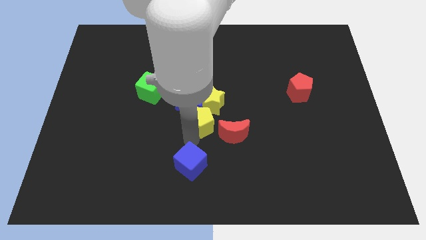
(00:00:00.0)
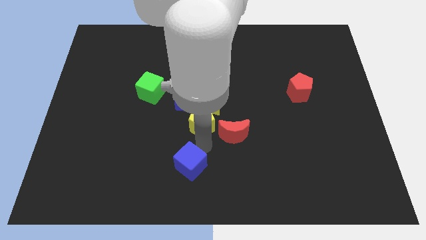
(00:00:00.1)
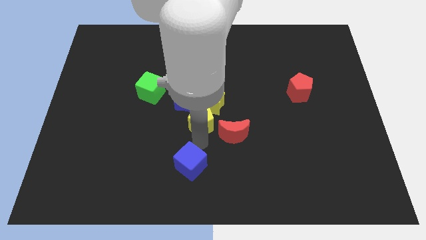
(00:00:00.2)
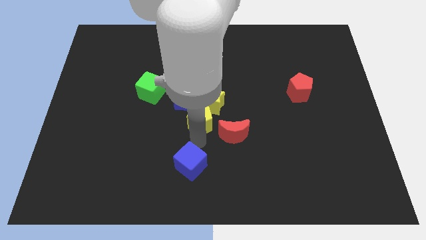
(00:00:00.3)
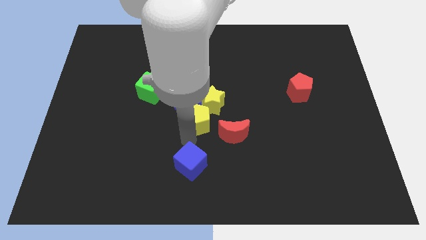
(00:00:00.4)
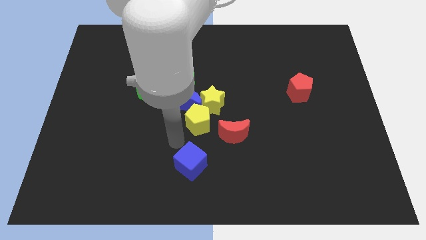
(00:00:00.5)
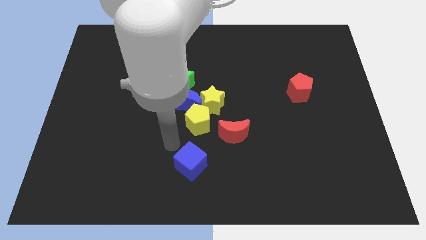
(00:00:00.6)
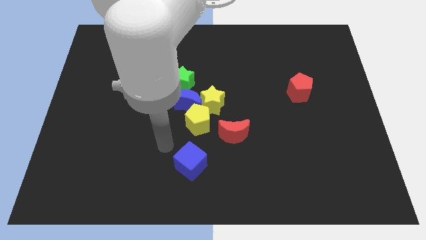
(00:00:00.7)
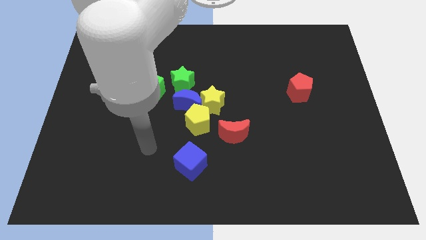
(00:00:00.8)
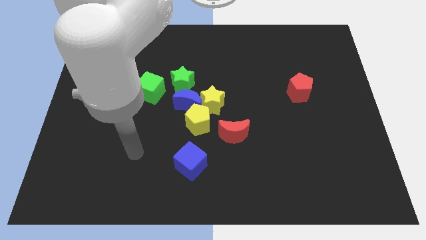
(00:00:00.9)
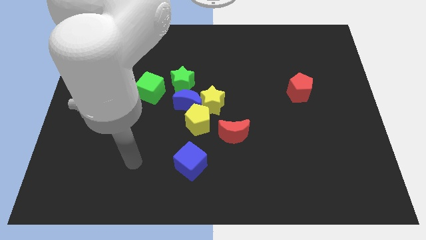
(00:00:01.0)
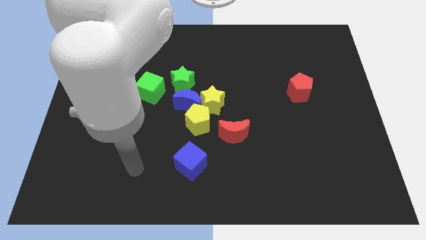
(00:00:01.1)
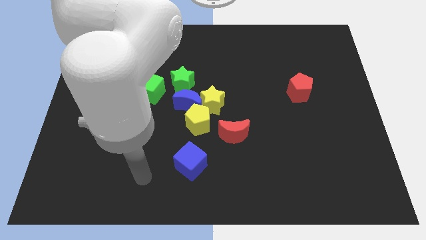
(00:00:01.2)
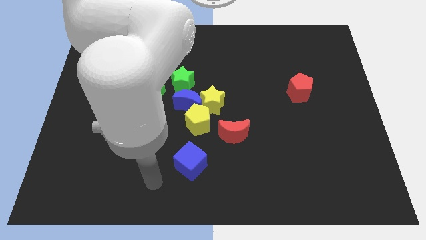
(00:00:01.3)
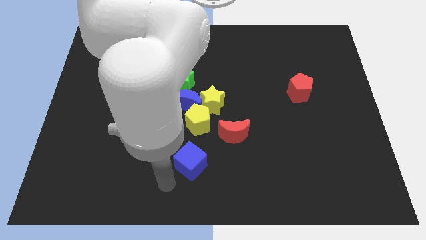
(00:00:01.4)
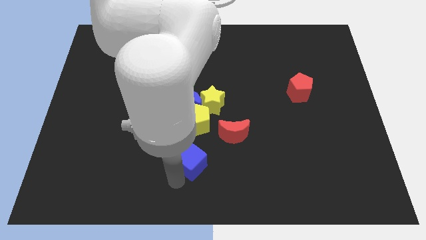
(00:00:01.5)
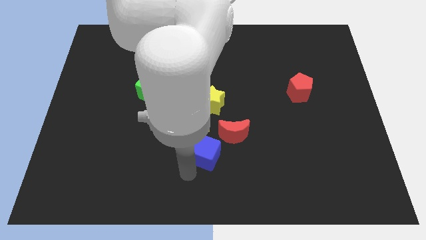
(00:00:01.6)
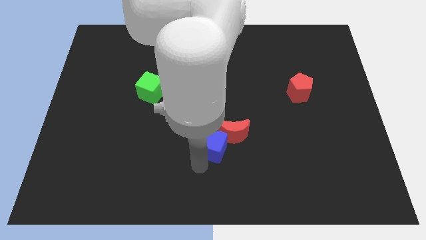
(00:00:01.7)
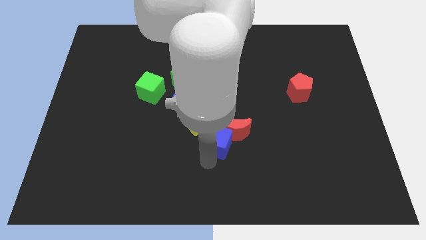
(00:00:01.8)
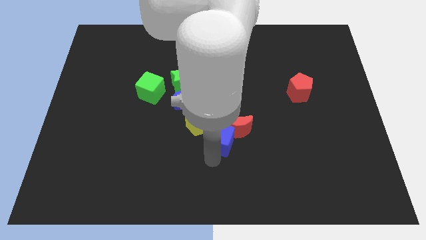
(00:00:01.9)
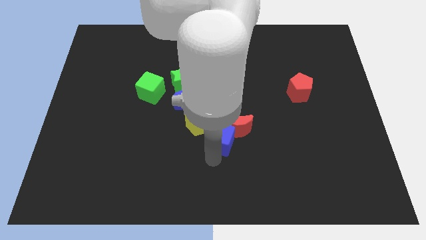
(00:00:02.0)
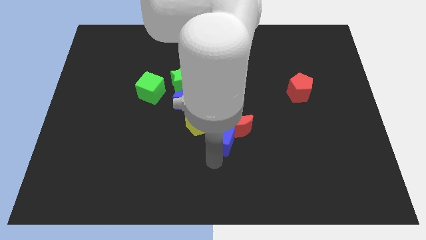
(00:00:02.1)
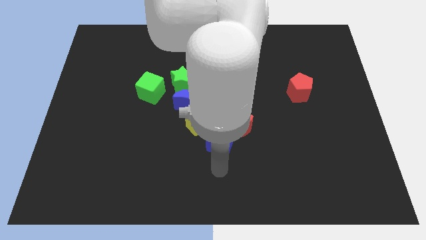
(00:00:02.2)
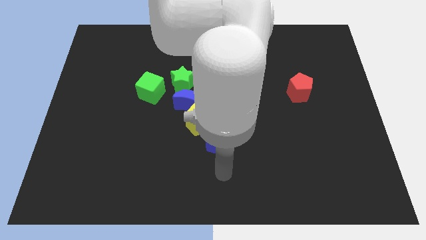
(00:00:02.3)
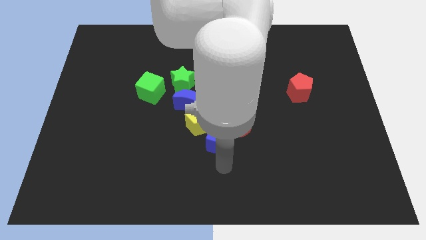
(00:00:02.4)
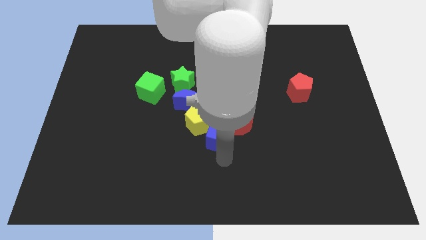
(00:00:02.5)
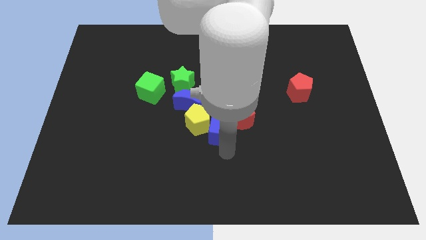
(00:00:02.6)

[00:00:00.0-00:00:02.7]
place the blue cube right to the yellow pentagon

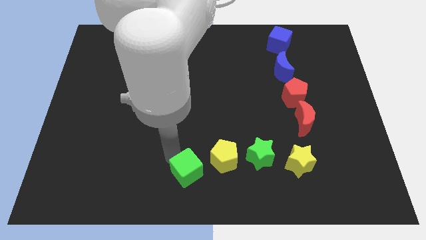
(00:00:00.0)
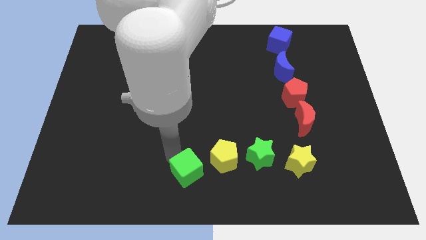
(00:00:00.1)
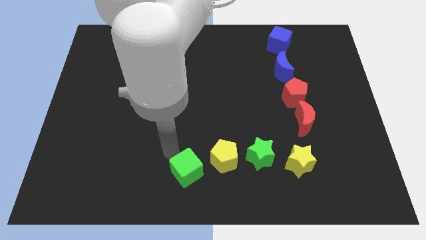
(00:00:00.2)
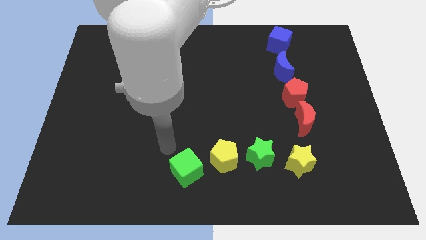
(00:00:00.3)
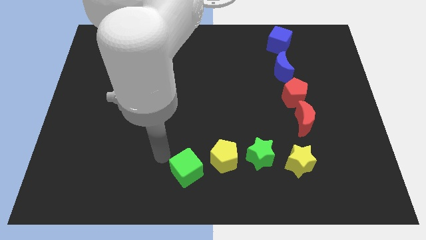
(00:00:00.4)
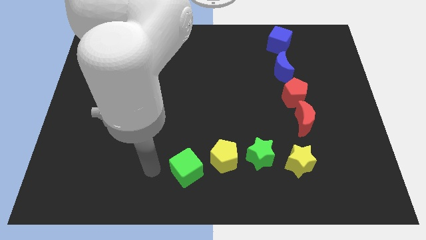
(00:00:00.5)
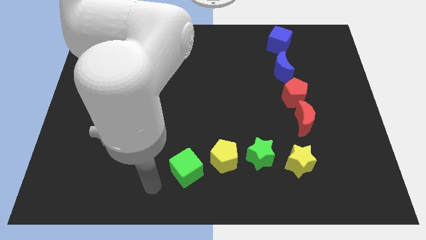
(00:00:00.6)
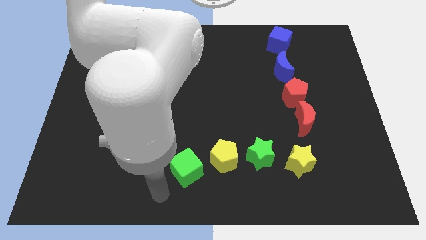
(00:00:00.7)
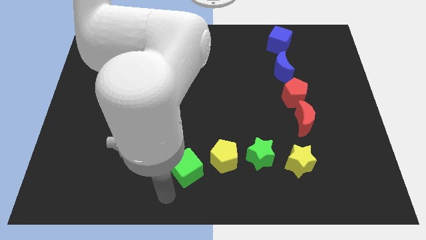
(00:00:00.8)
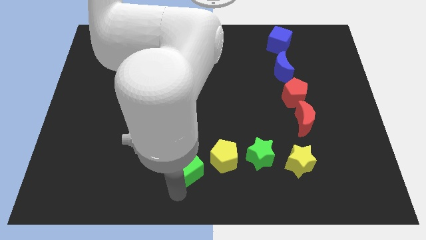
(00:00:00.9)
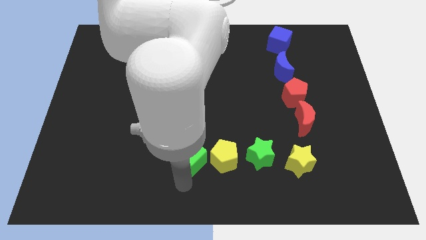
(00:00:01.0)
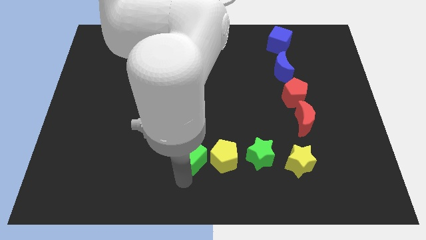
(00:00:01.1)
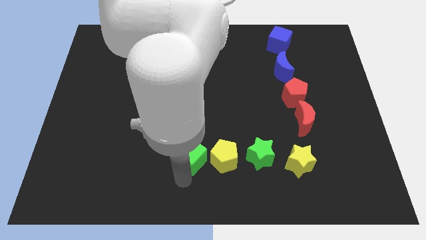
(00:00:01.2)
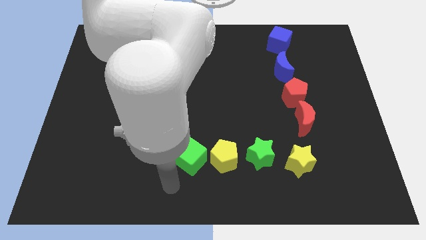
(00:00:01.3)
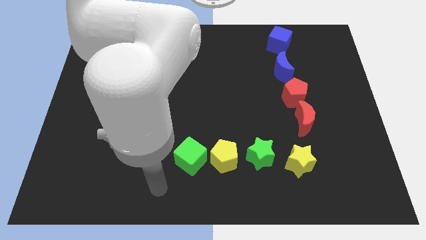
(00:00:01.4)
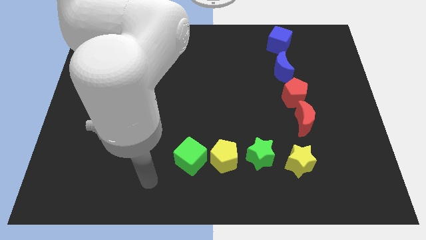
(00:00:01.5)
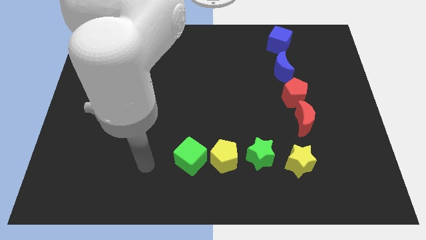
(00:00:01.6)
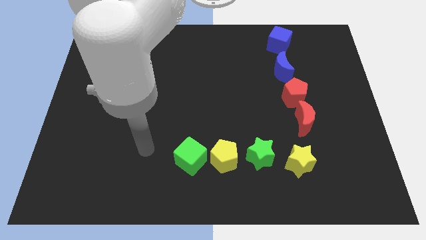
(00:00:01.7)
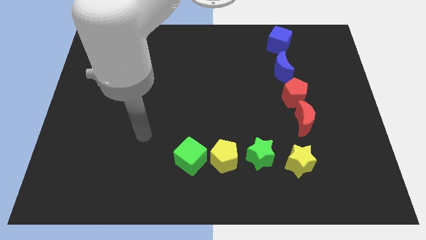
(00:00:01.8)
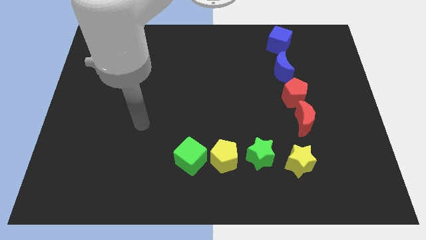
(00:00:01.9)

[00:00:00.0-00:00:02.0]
place the green cube horizontally to the left side of the yellow pentagon

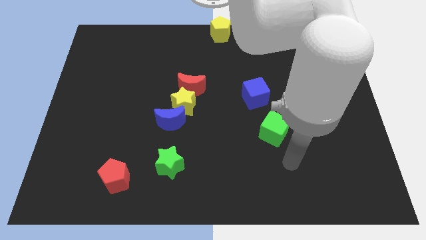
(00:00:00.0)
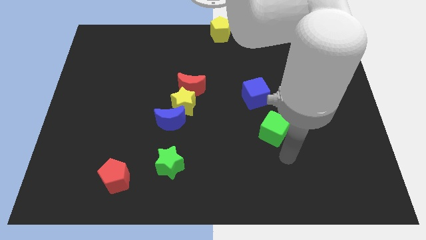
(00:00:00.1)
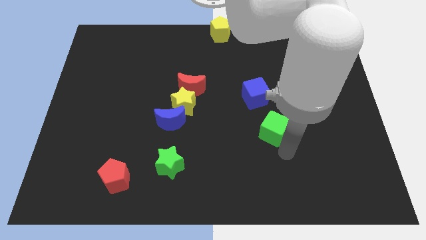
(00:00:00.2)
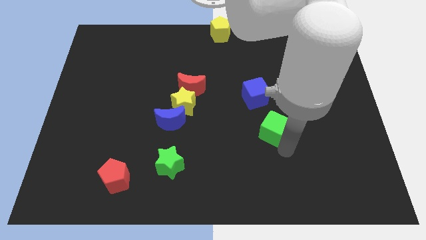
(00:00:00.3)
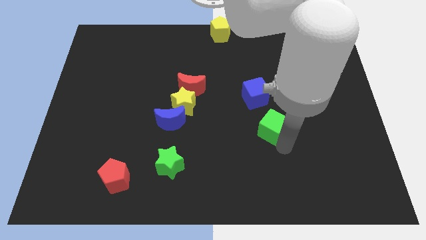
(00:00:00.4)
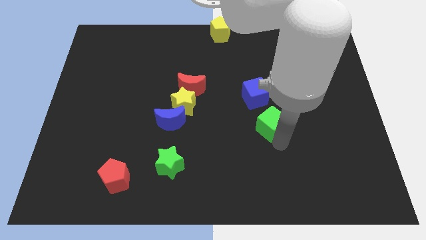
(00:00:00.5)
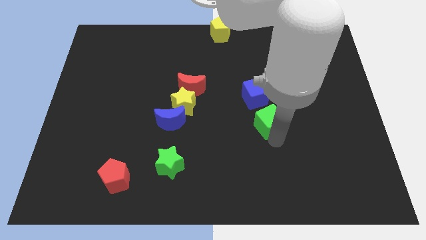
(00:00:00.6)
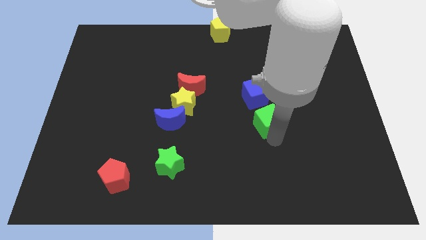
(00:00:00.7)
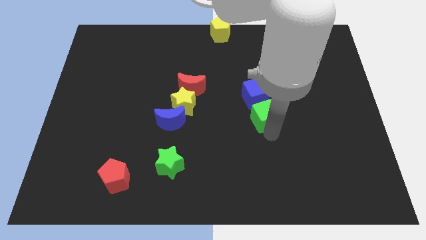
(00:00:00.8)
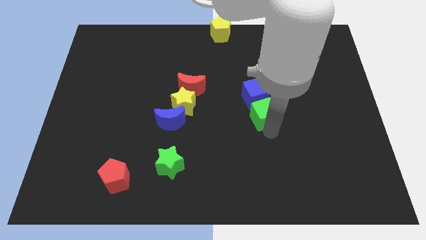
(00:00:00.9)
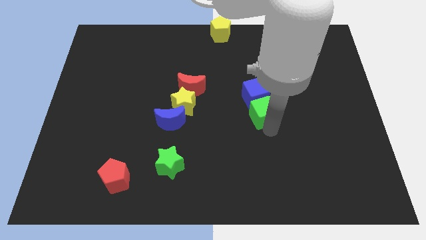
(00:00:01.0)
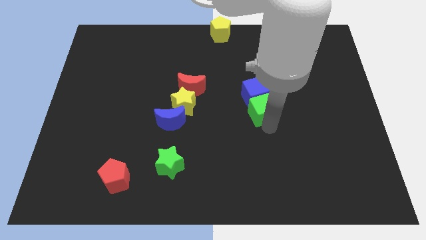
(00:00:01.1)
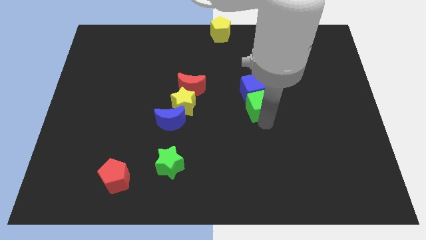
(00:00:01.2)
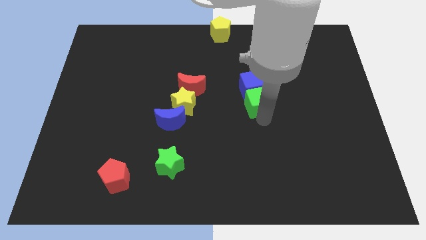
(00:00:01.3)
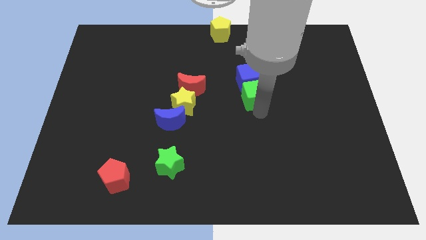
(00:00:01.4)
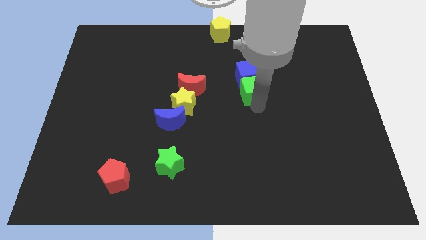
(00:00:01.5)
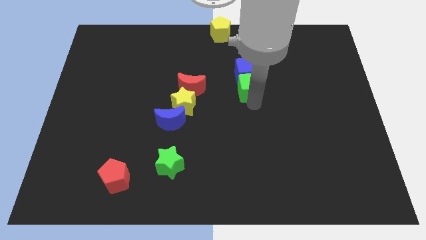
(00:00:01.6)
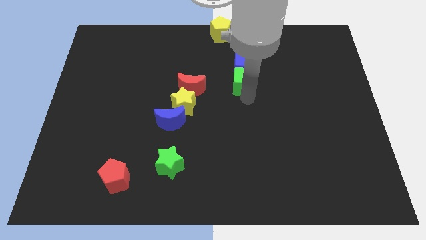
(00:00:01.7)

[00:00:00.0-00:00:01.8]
push the green cube into the blue cube

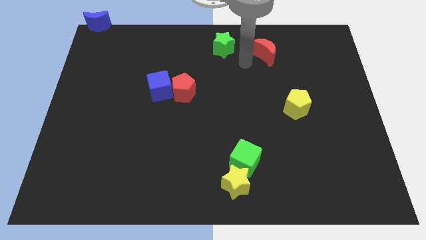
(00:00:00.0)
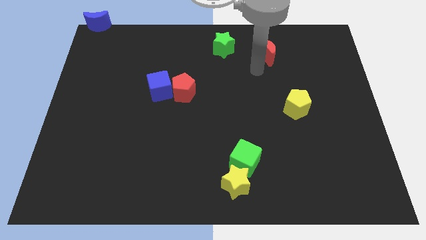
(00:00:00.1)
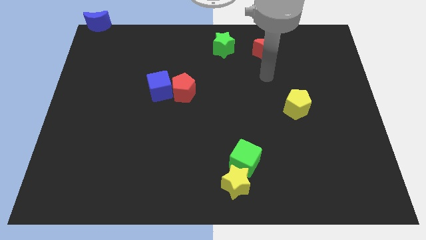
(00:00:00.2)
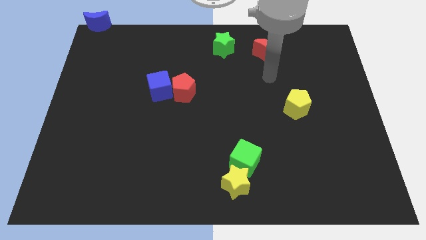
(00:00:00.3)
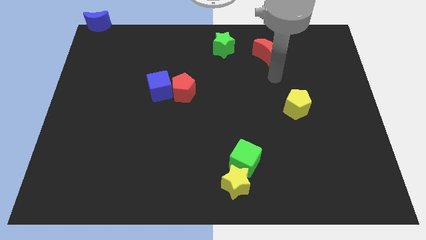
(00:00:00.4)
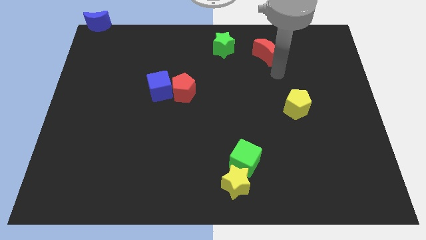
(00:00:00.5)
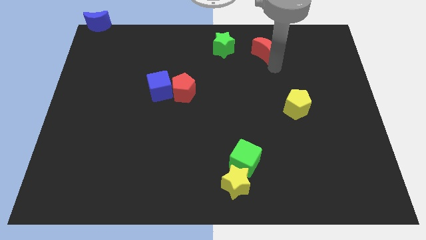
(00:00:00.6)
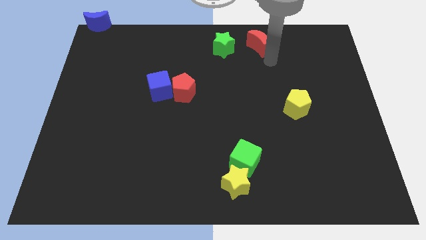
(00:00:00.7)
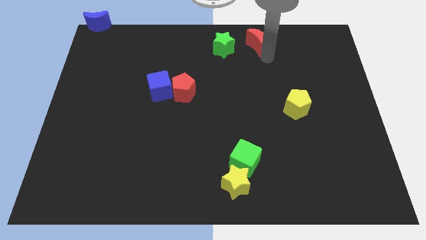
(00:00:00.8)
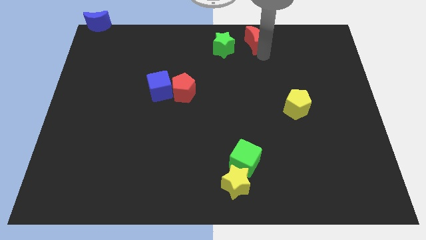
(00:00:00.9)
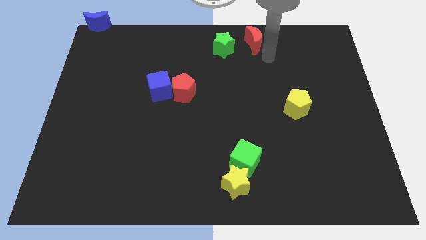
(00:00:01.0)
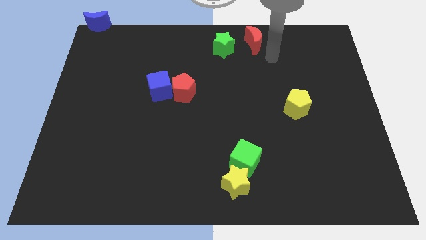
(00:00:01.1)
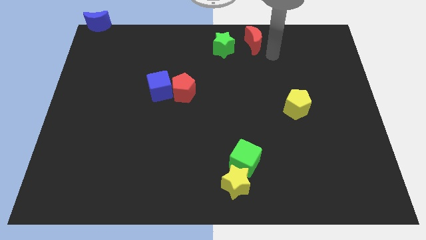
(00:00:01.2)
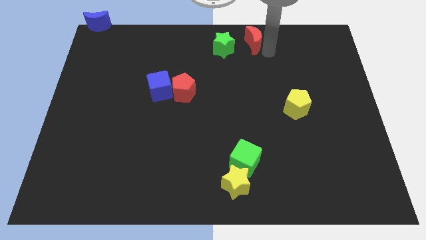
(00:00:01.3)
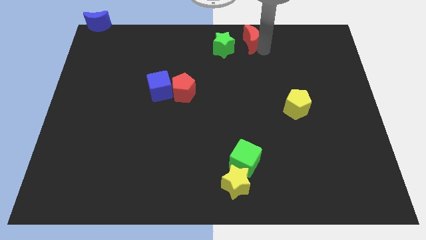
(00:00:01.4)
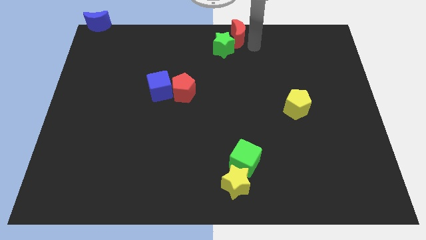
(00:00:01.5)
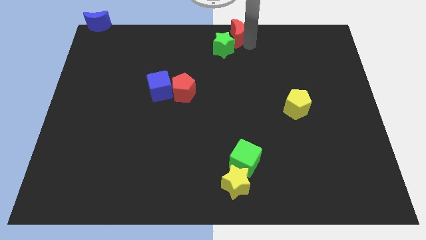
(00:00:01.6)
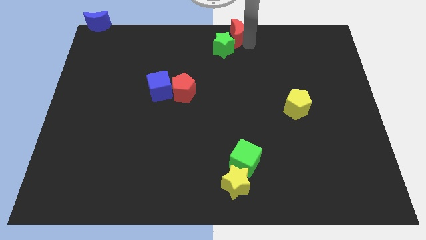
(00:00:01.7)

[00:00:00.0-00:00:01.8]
place red moon to the top center of the board

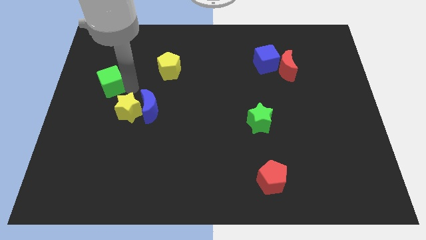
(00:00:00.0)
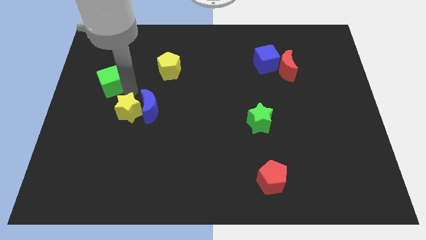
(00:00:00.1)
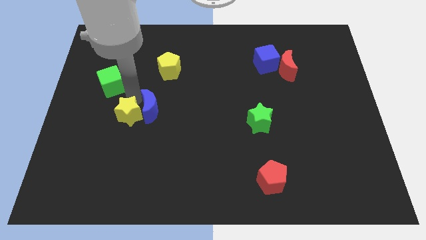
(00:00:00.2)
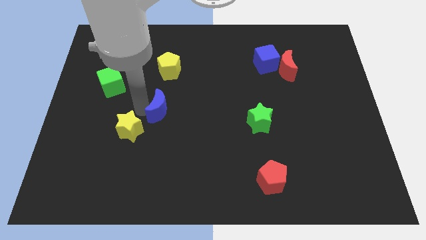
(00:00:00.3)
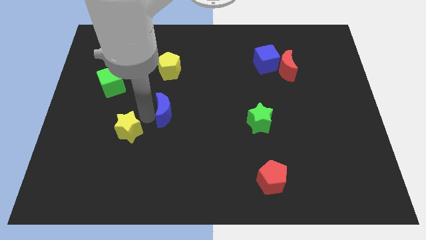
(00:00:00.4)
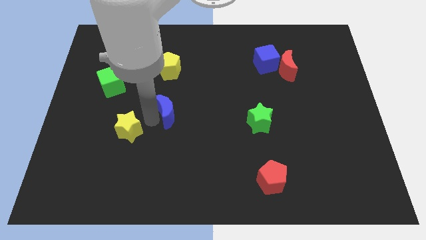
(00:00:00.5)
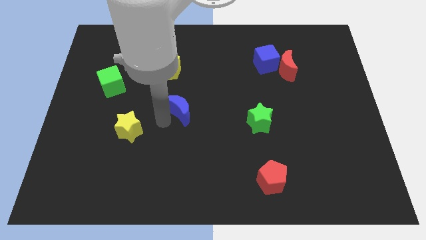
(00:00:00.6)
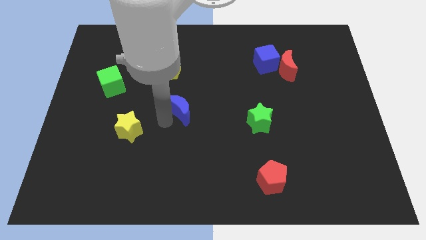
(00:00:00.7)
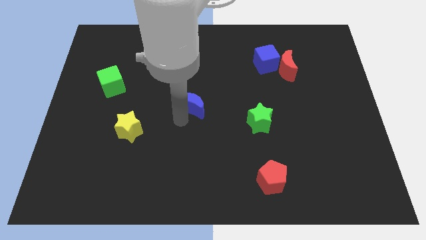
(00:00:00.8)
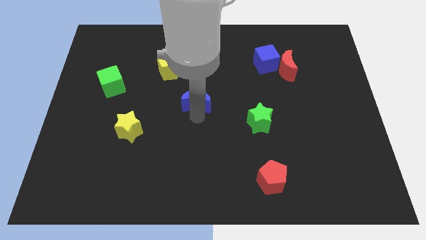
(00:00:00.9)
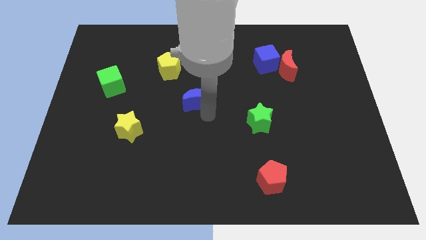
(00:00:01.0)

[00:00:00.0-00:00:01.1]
place blue moon to the center
